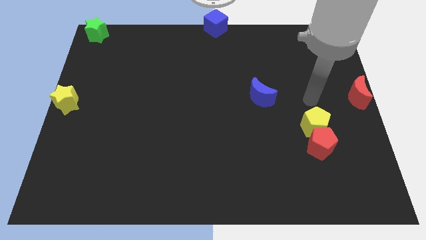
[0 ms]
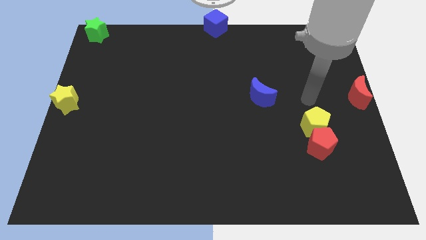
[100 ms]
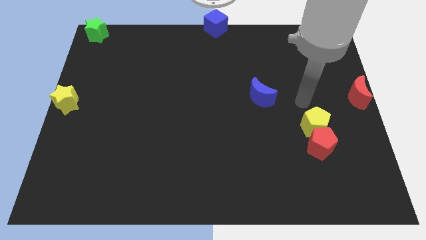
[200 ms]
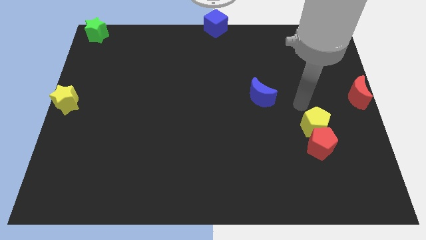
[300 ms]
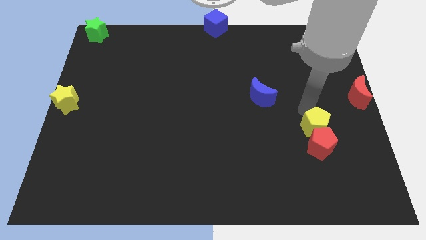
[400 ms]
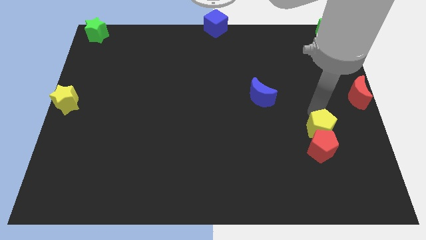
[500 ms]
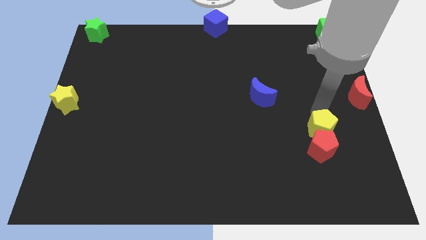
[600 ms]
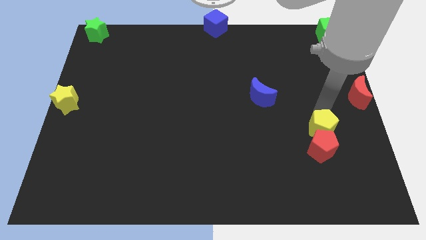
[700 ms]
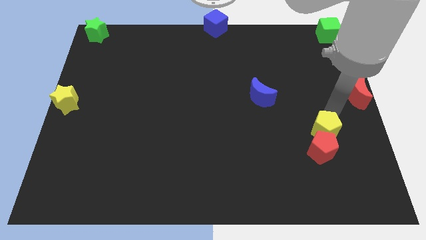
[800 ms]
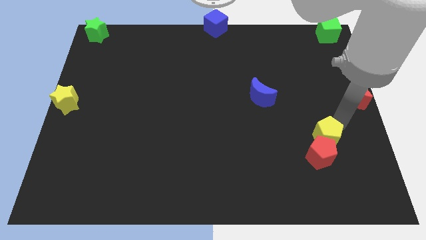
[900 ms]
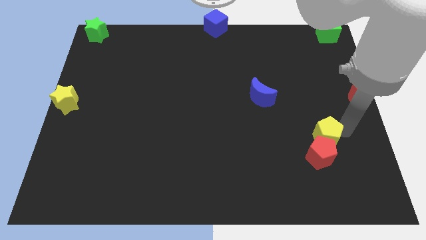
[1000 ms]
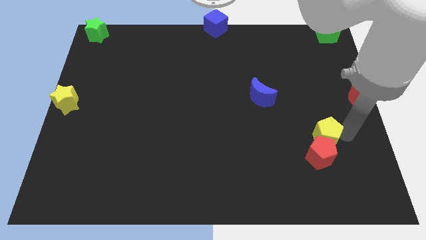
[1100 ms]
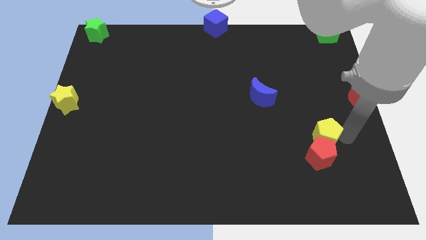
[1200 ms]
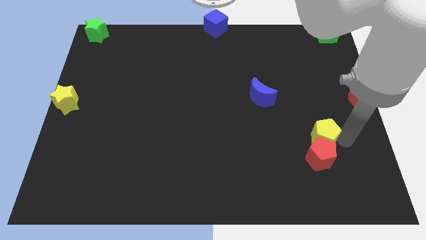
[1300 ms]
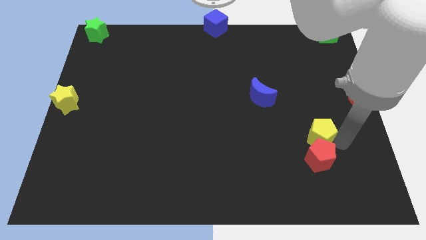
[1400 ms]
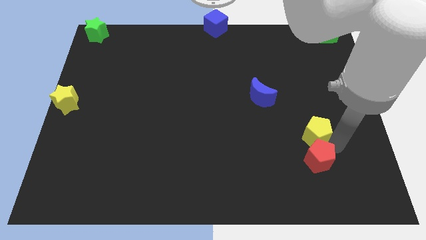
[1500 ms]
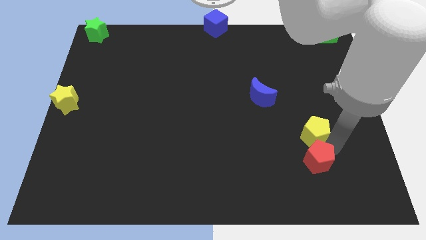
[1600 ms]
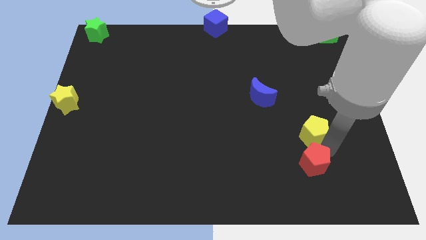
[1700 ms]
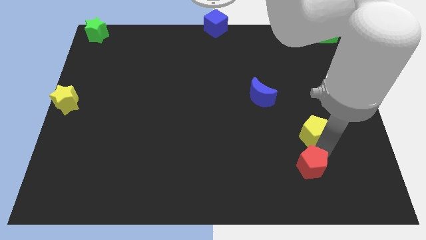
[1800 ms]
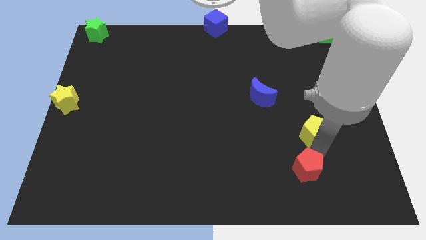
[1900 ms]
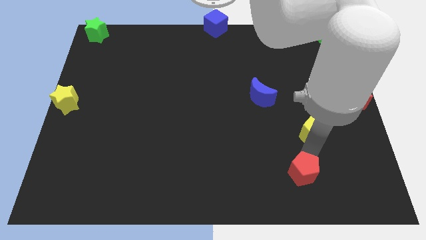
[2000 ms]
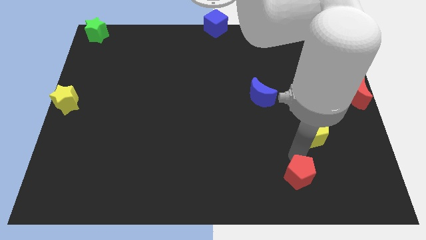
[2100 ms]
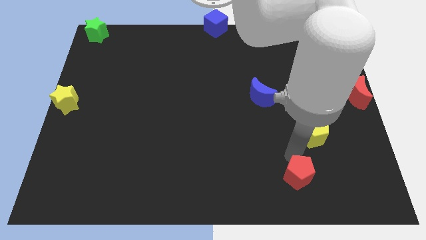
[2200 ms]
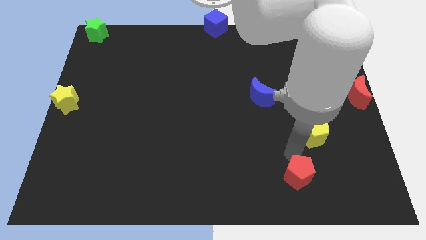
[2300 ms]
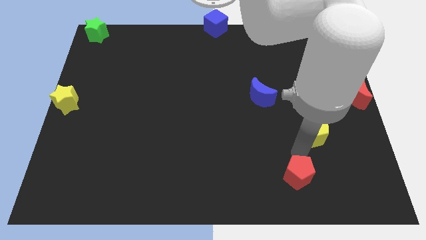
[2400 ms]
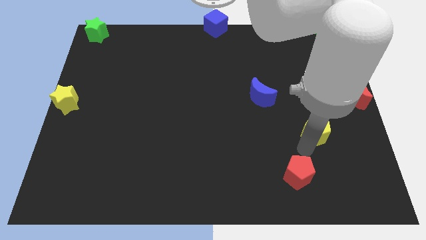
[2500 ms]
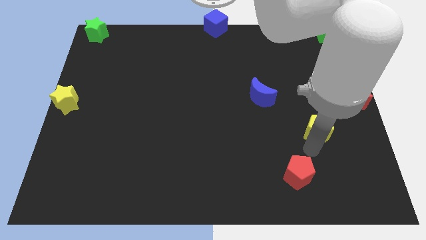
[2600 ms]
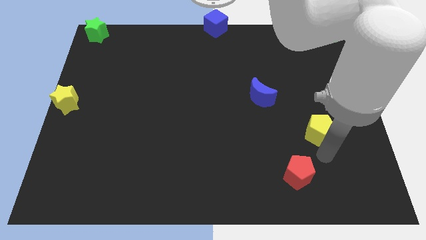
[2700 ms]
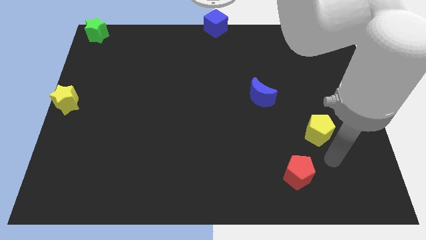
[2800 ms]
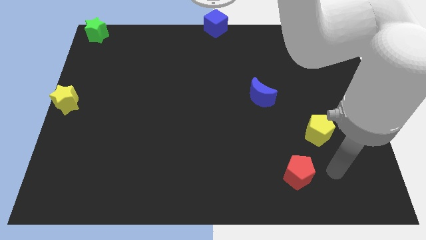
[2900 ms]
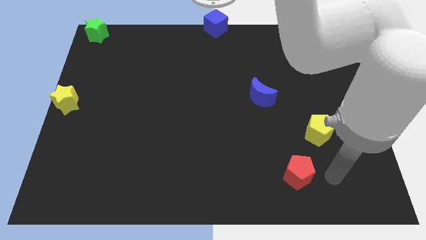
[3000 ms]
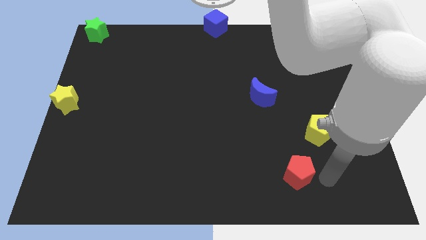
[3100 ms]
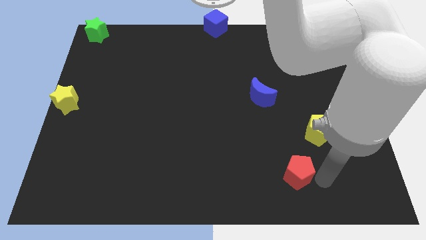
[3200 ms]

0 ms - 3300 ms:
separate the yellow pentagon and red pentagon

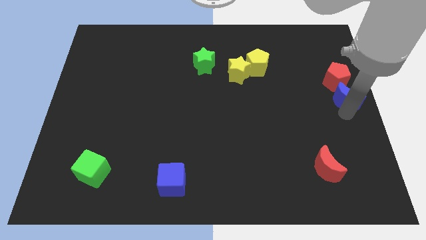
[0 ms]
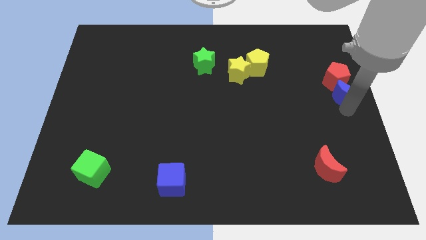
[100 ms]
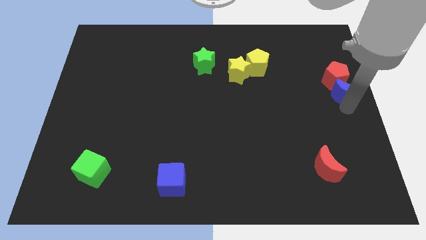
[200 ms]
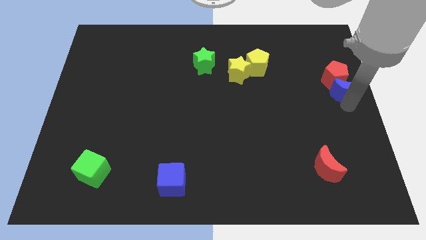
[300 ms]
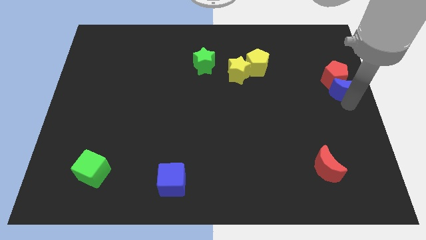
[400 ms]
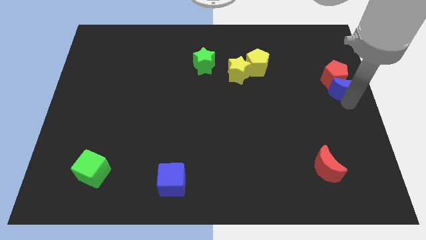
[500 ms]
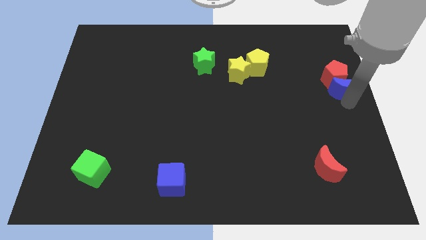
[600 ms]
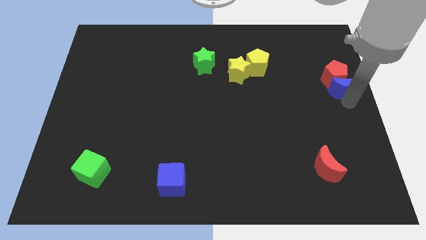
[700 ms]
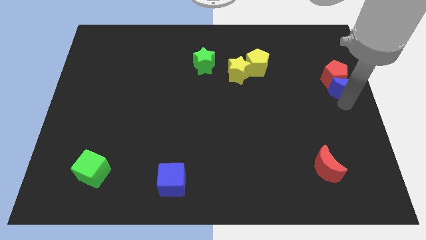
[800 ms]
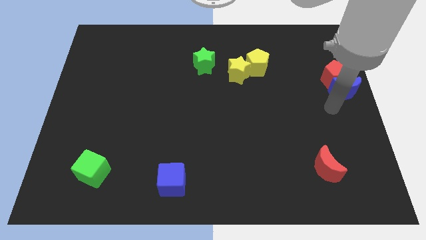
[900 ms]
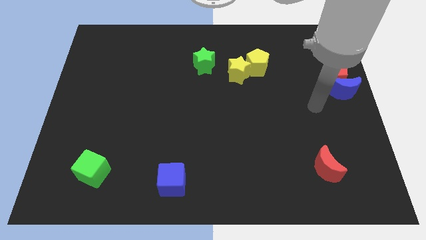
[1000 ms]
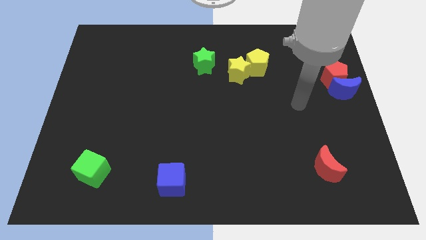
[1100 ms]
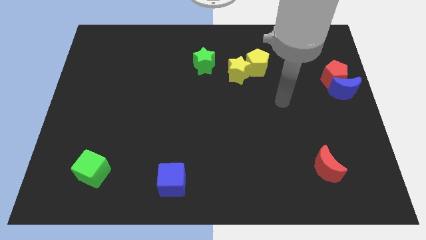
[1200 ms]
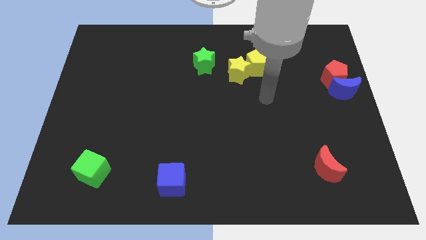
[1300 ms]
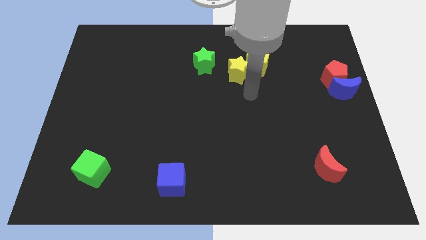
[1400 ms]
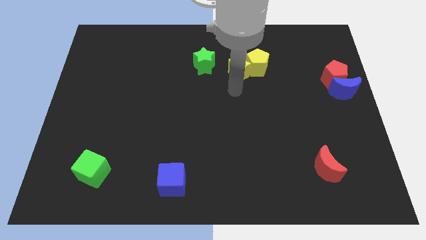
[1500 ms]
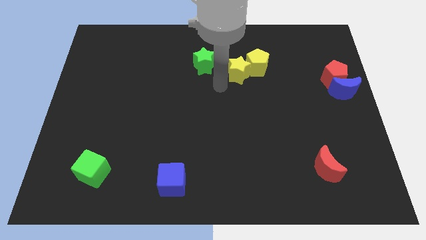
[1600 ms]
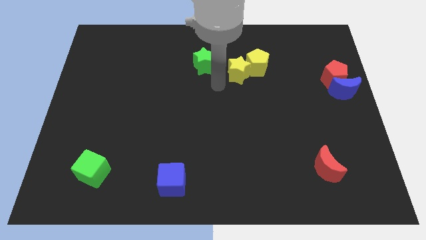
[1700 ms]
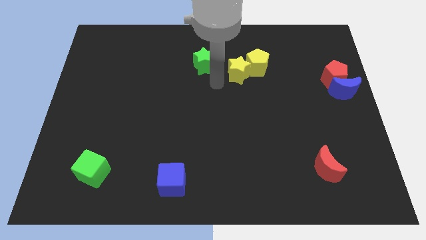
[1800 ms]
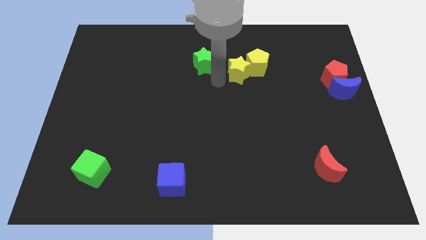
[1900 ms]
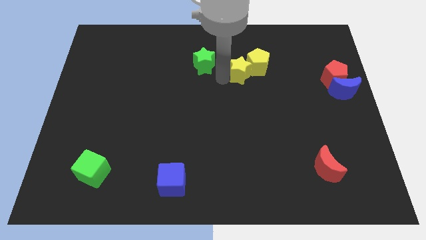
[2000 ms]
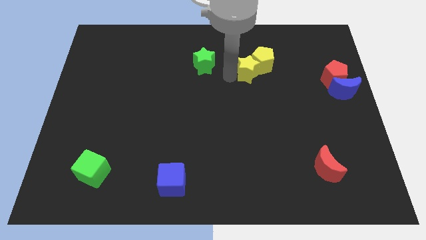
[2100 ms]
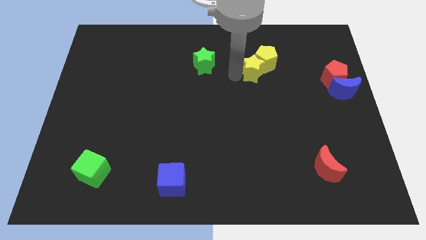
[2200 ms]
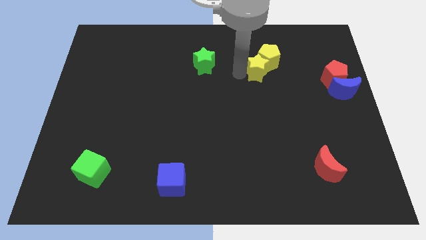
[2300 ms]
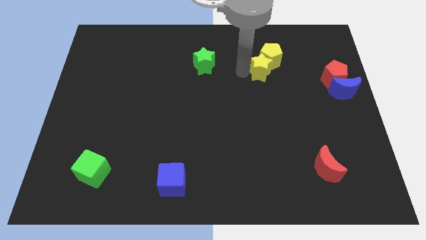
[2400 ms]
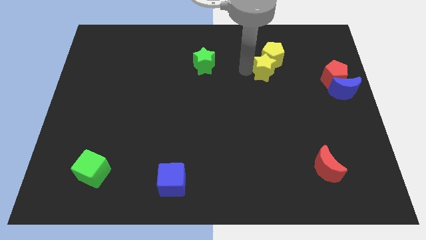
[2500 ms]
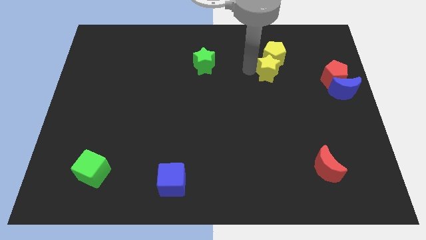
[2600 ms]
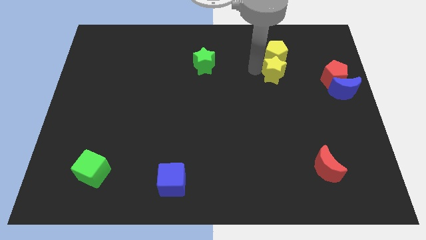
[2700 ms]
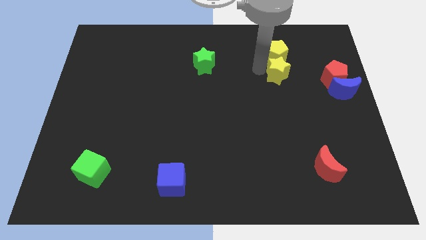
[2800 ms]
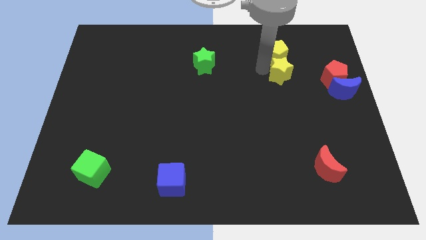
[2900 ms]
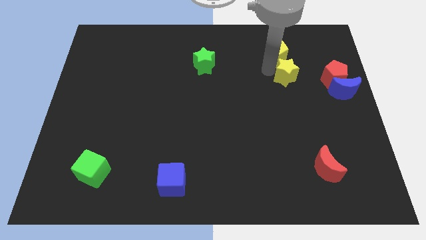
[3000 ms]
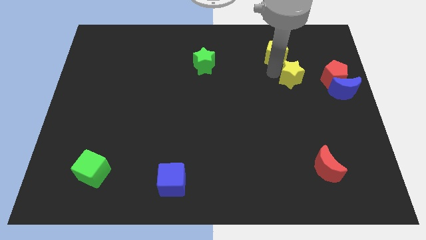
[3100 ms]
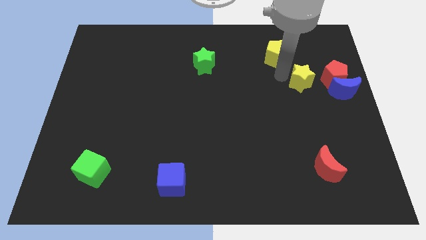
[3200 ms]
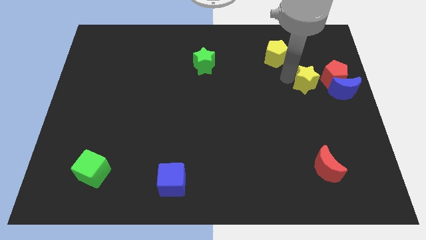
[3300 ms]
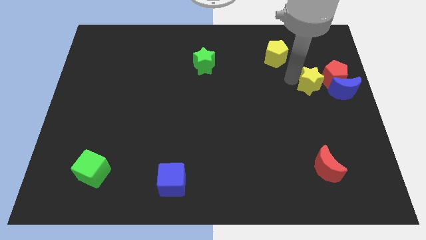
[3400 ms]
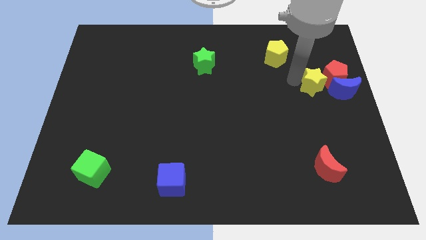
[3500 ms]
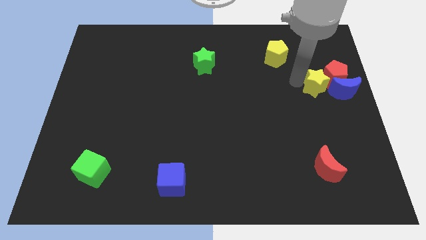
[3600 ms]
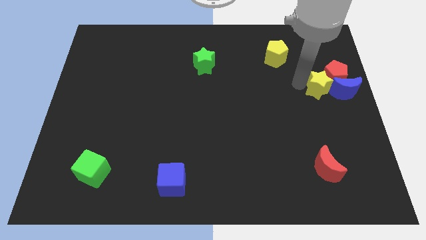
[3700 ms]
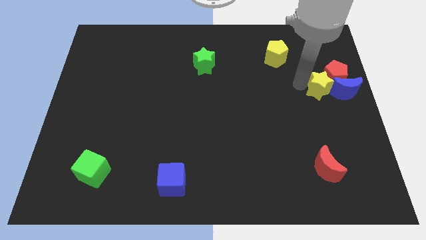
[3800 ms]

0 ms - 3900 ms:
push yellow star towards the left of the blue crescent

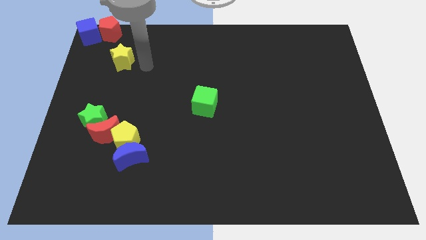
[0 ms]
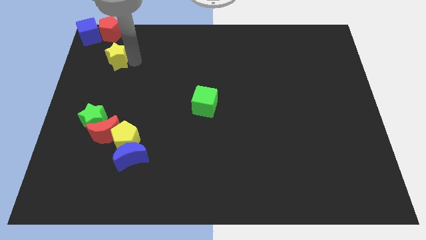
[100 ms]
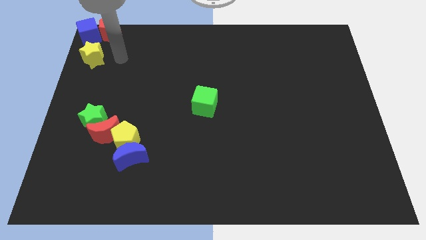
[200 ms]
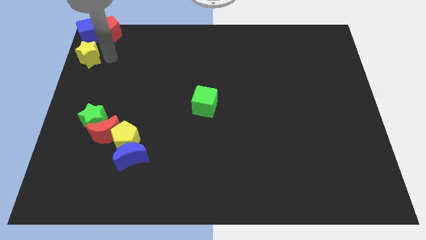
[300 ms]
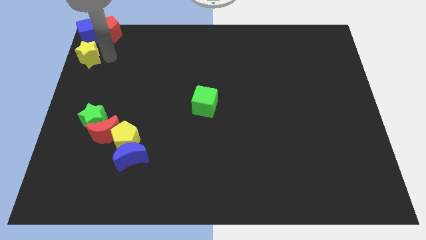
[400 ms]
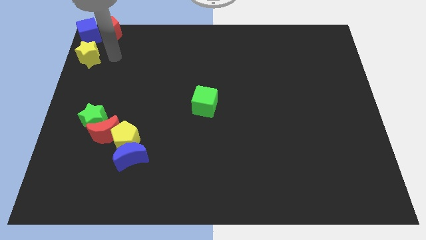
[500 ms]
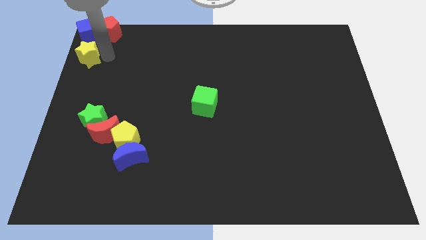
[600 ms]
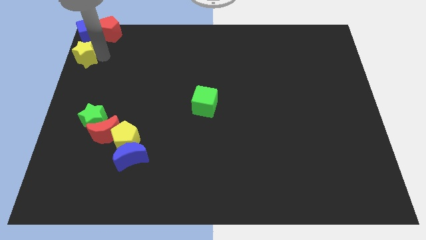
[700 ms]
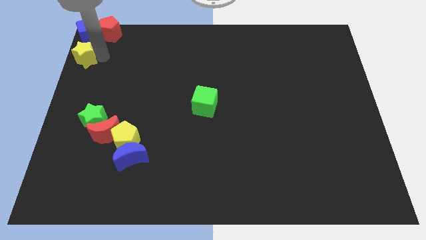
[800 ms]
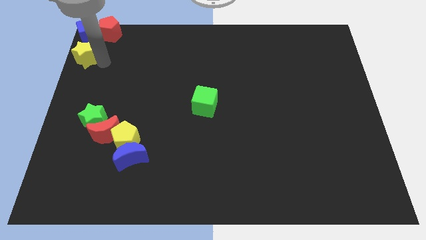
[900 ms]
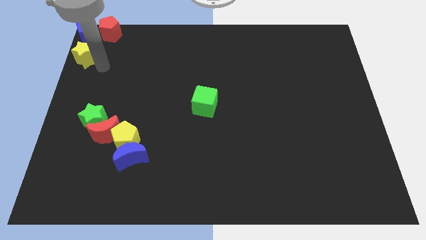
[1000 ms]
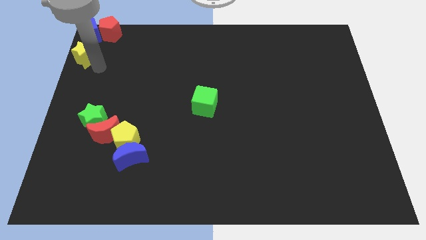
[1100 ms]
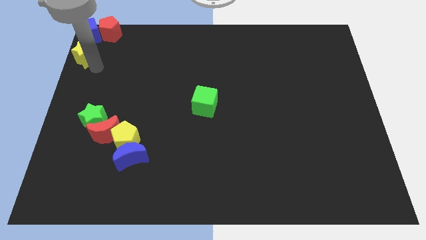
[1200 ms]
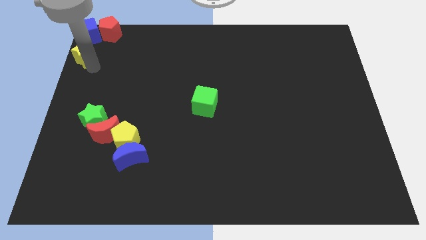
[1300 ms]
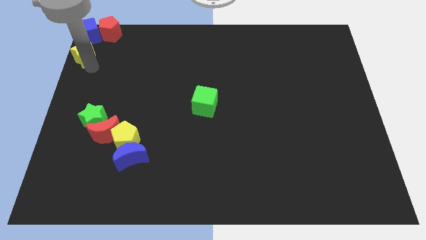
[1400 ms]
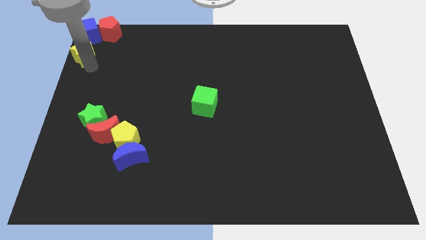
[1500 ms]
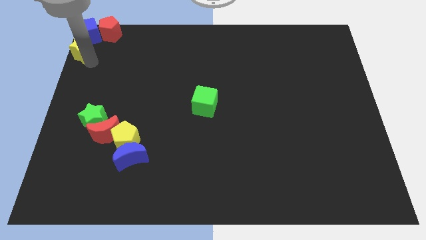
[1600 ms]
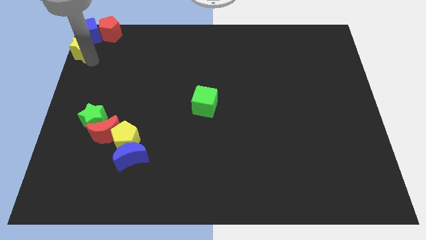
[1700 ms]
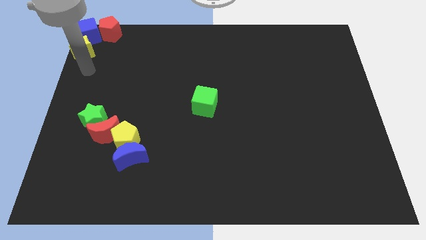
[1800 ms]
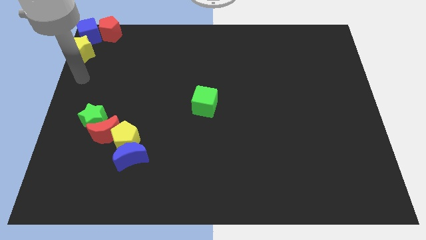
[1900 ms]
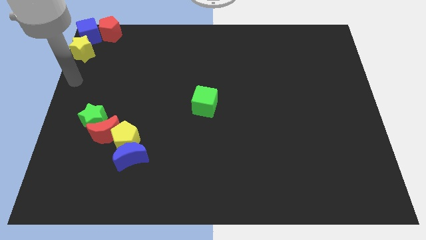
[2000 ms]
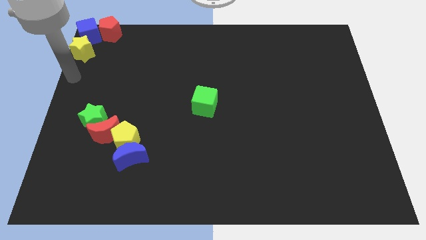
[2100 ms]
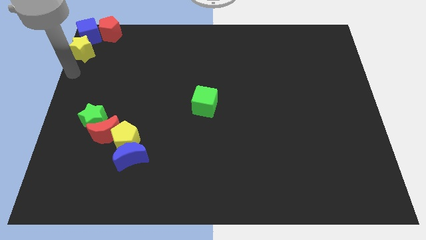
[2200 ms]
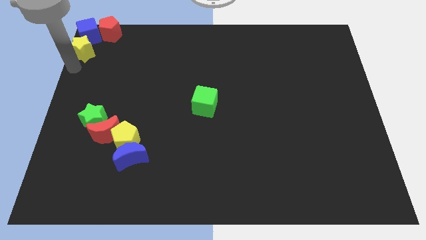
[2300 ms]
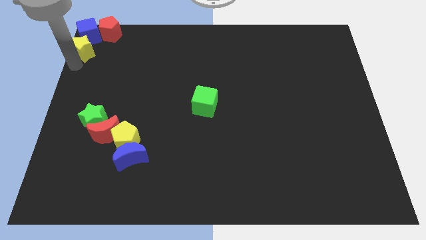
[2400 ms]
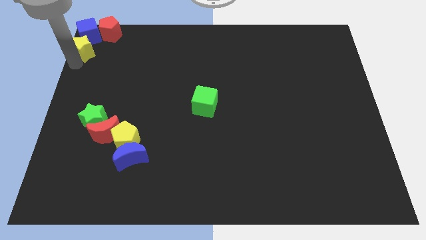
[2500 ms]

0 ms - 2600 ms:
place the yellow star below the blue cube
